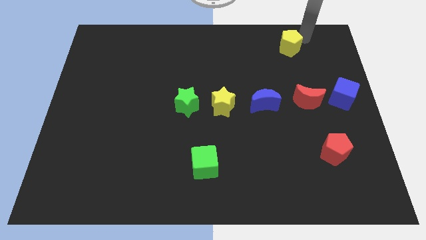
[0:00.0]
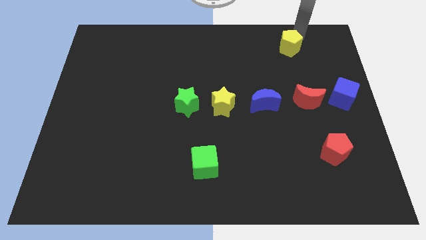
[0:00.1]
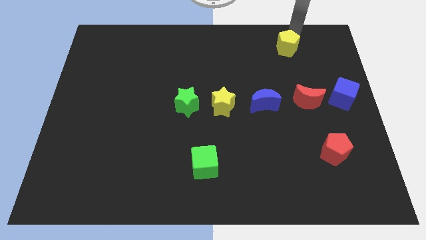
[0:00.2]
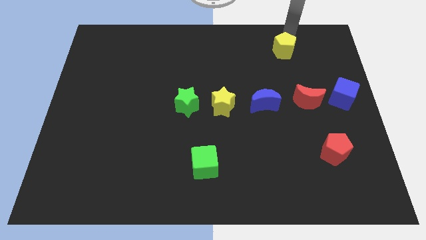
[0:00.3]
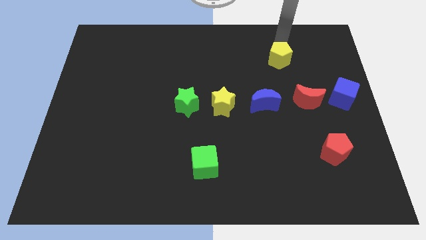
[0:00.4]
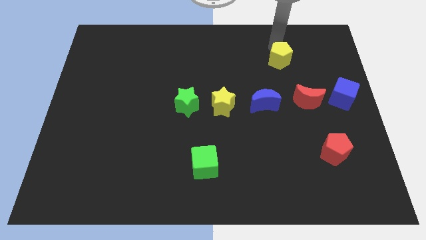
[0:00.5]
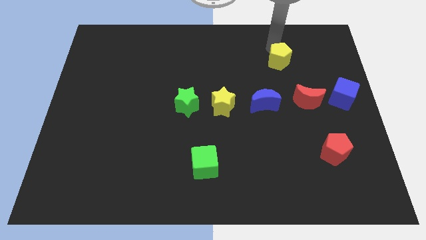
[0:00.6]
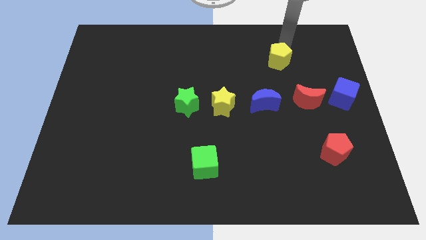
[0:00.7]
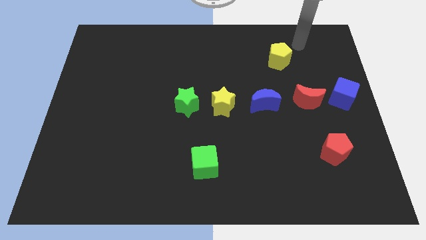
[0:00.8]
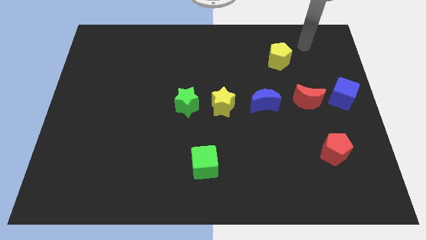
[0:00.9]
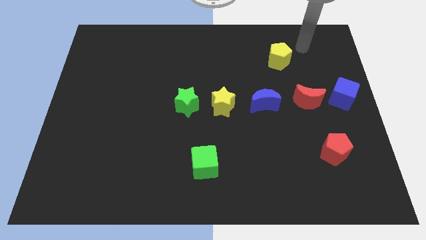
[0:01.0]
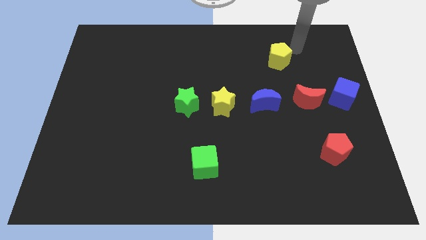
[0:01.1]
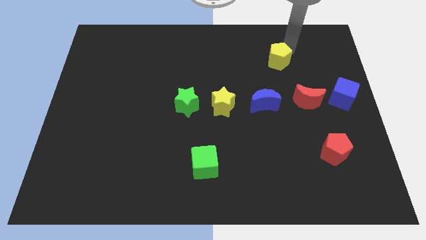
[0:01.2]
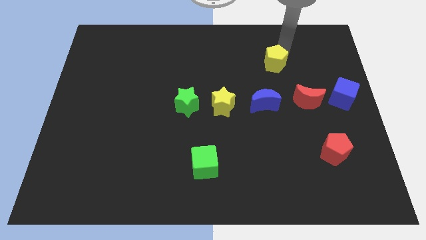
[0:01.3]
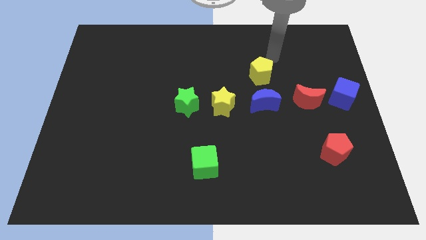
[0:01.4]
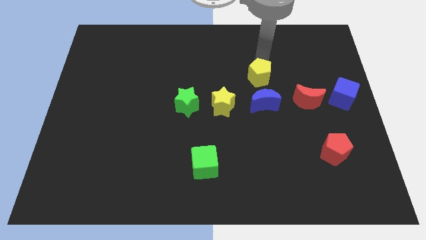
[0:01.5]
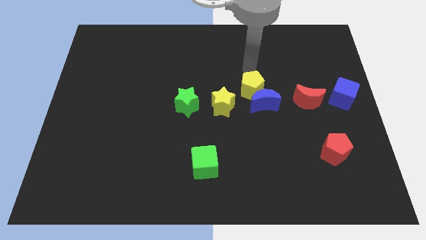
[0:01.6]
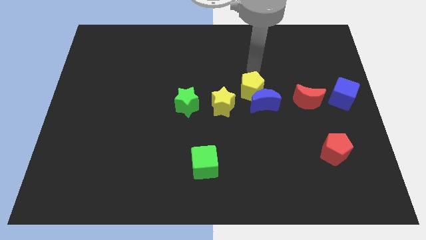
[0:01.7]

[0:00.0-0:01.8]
drag the yellow pentagon slightly downwards

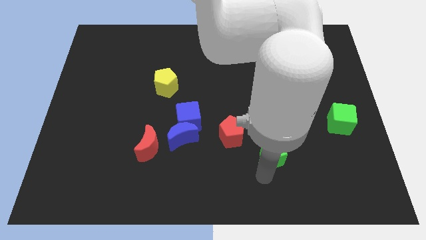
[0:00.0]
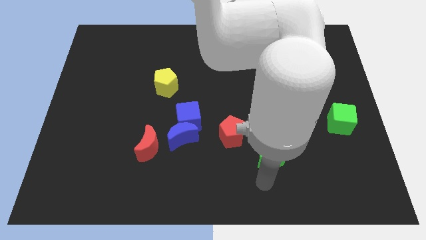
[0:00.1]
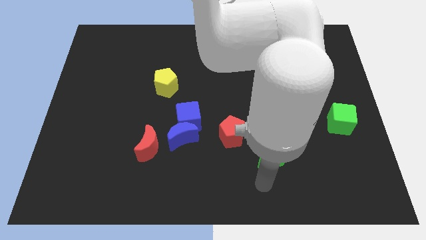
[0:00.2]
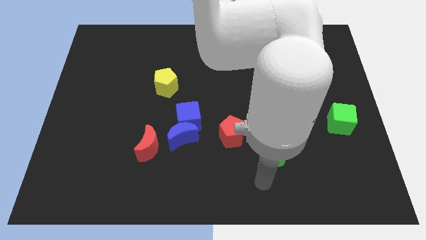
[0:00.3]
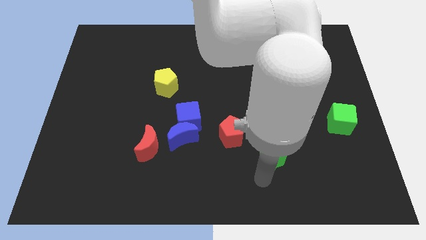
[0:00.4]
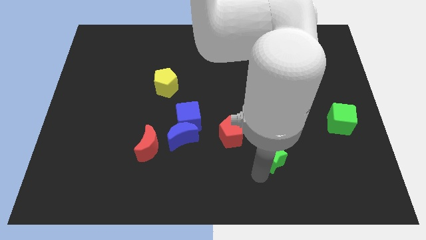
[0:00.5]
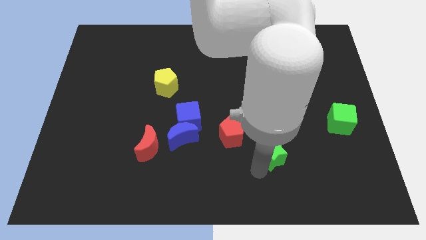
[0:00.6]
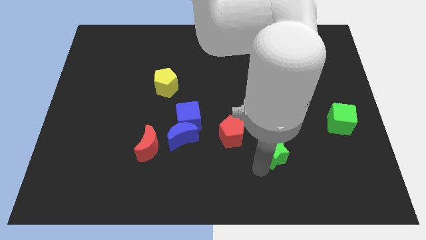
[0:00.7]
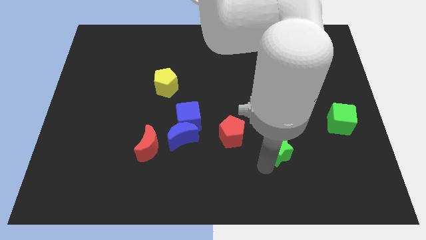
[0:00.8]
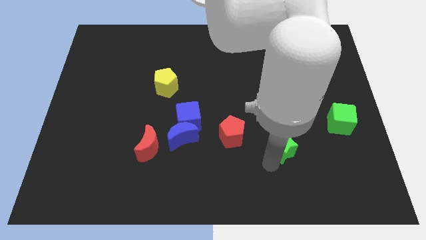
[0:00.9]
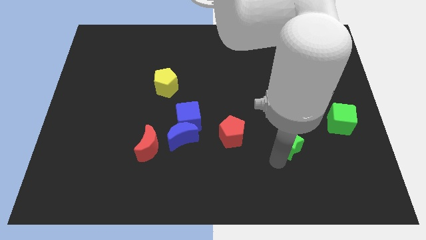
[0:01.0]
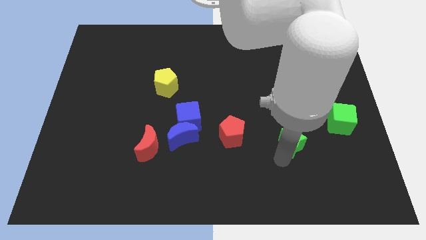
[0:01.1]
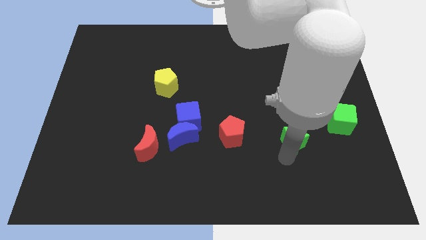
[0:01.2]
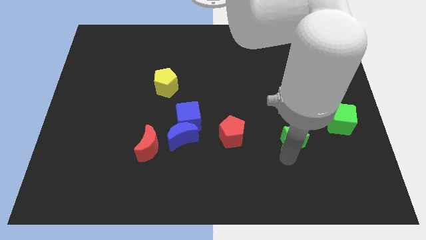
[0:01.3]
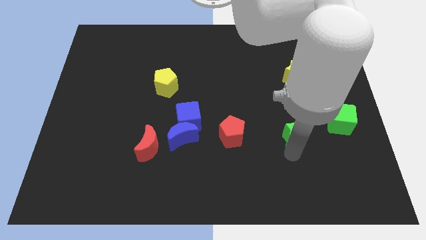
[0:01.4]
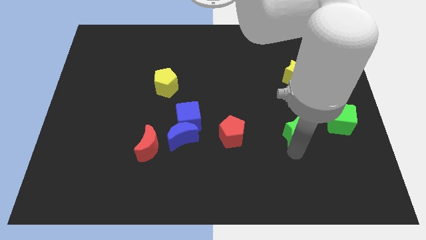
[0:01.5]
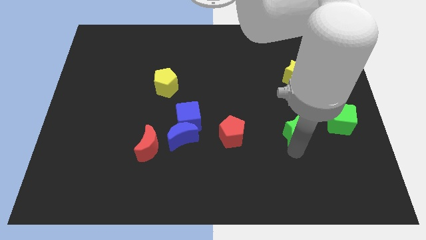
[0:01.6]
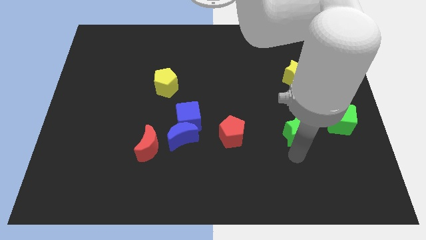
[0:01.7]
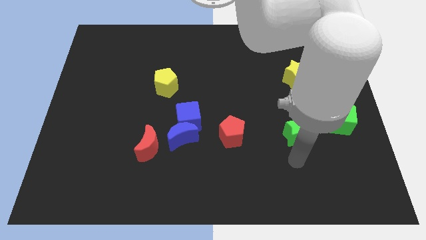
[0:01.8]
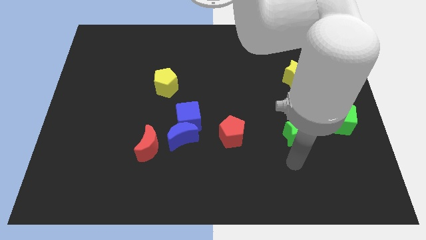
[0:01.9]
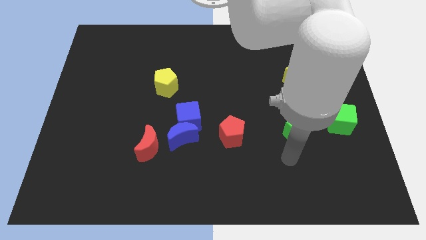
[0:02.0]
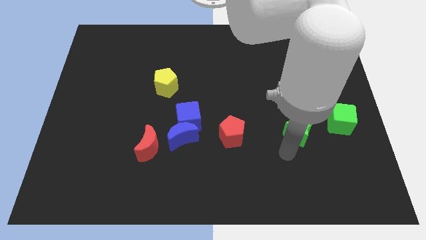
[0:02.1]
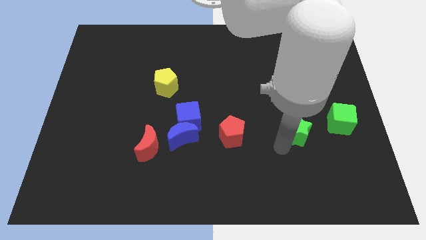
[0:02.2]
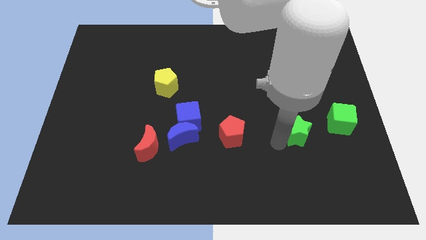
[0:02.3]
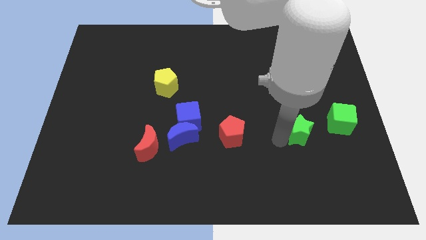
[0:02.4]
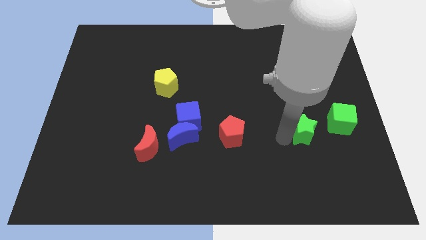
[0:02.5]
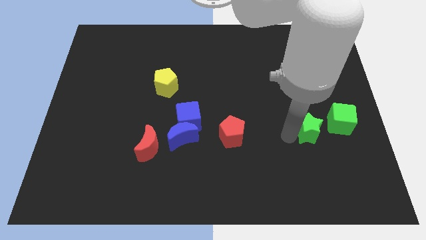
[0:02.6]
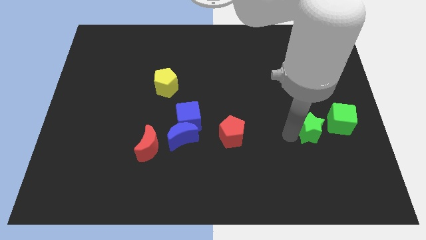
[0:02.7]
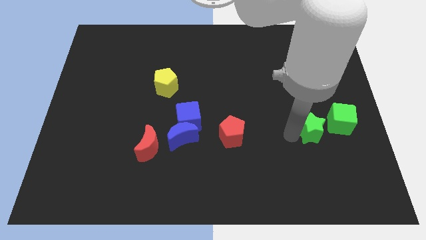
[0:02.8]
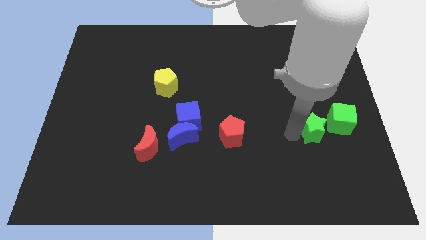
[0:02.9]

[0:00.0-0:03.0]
push the green star to the left of the green cube

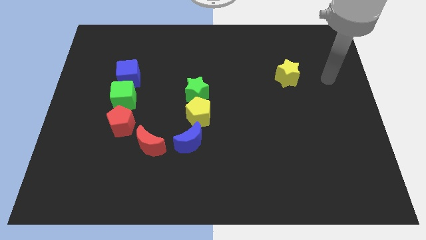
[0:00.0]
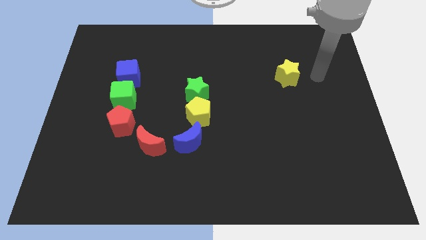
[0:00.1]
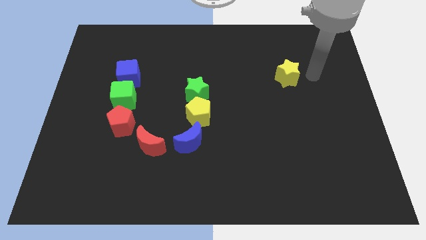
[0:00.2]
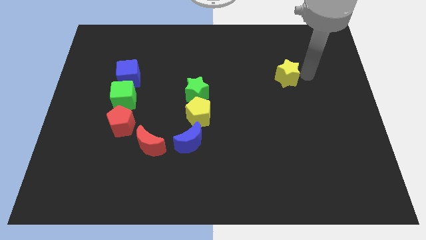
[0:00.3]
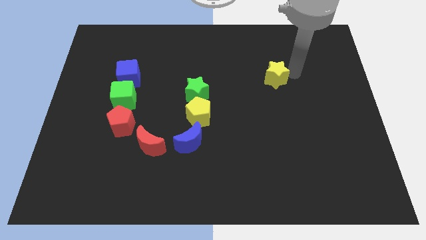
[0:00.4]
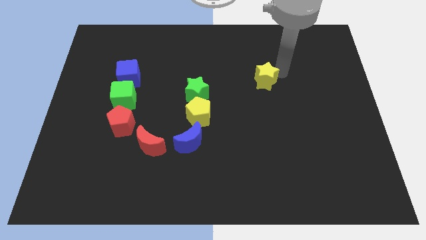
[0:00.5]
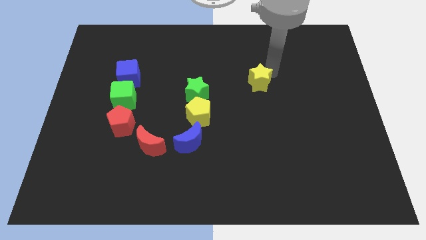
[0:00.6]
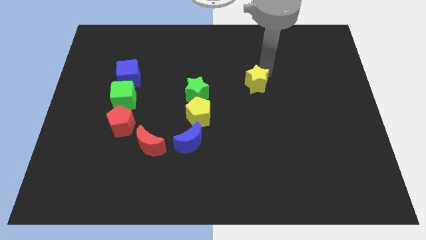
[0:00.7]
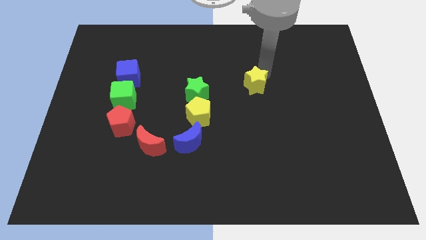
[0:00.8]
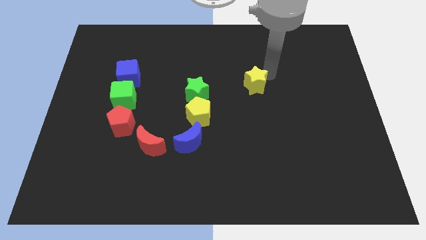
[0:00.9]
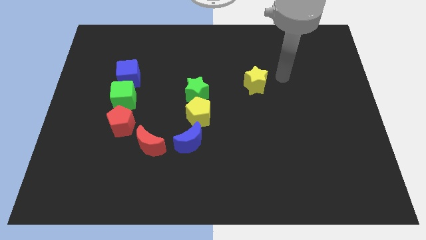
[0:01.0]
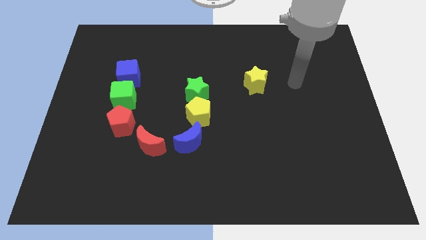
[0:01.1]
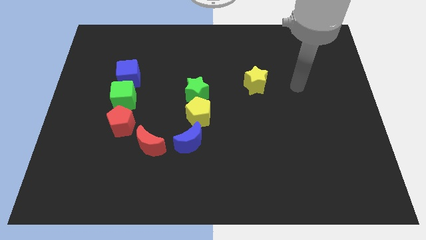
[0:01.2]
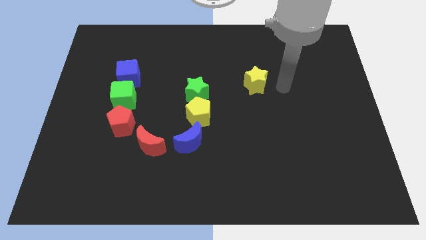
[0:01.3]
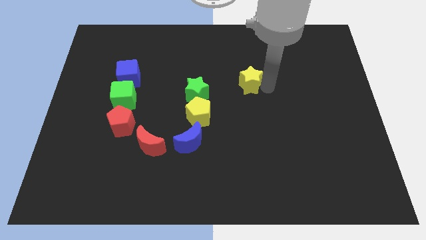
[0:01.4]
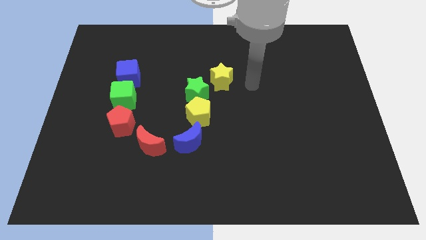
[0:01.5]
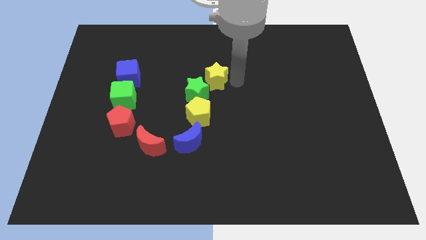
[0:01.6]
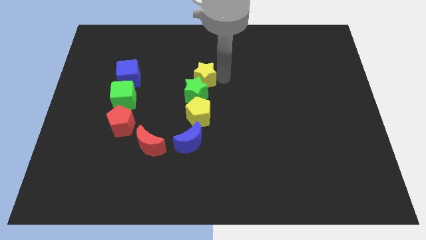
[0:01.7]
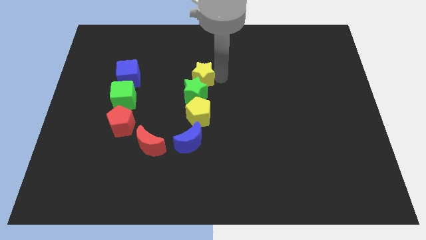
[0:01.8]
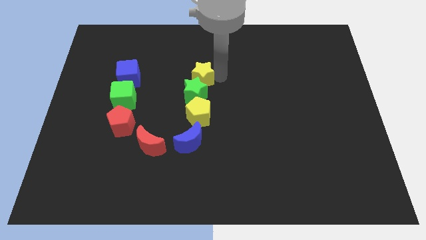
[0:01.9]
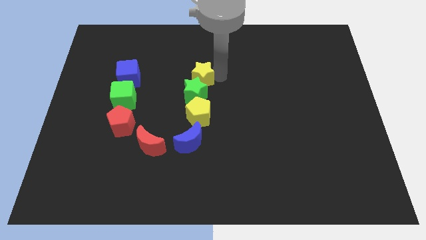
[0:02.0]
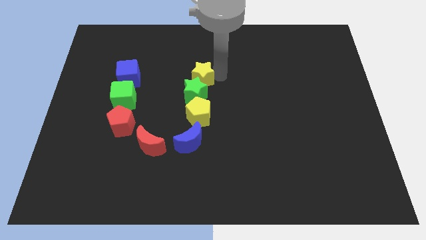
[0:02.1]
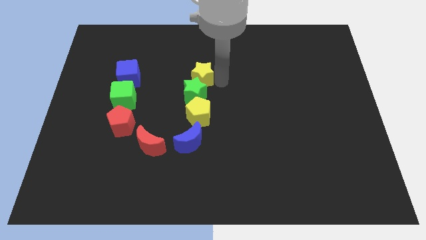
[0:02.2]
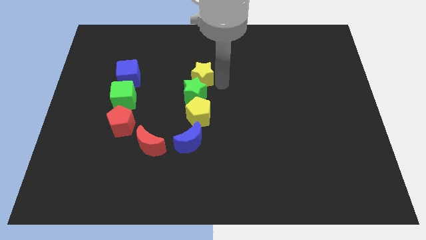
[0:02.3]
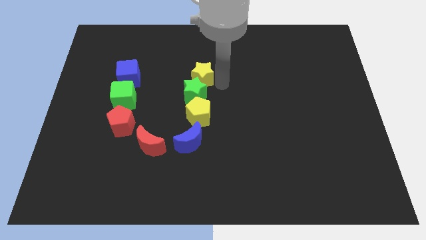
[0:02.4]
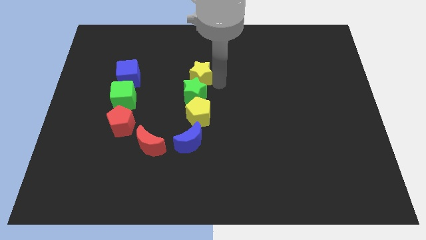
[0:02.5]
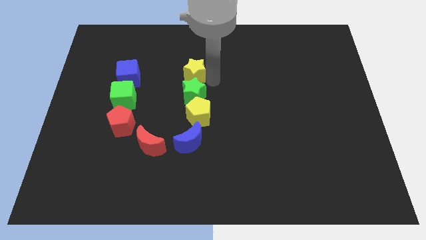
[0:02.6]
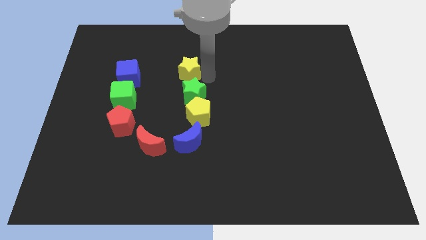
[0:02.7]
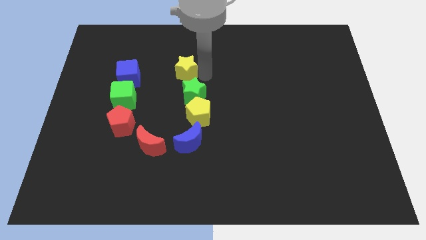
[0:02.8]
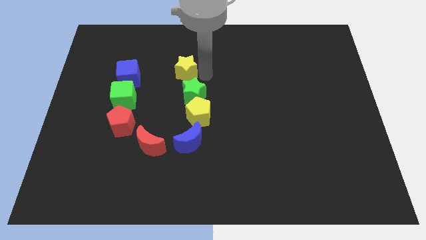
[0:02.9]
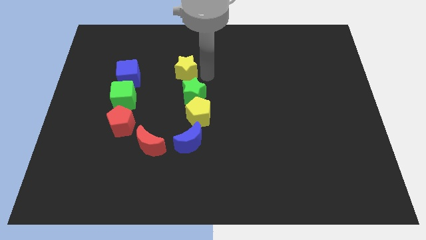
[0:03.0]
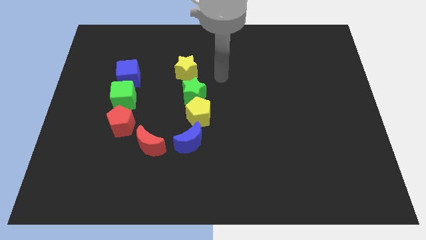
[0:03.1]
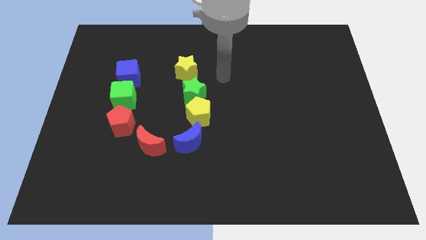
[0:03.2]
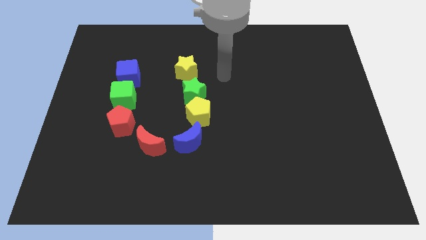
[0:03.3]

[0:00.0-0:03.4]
push the yellow star above the green star

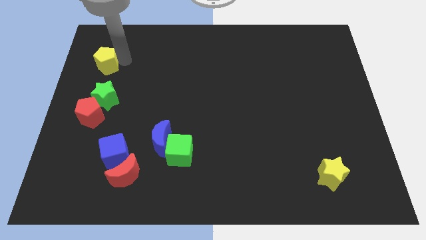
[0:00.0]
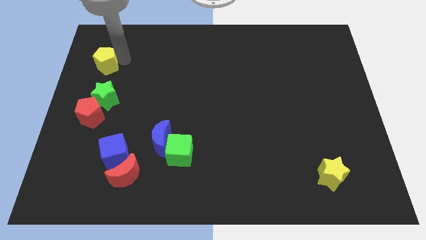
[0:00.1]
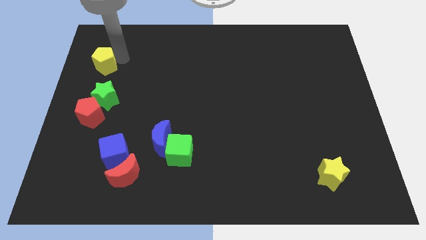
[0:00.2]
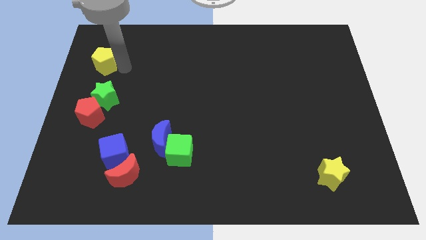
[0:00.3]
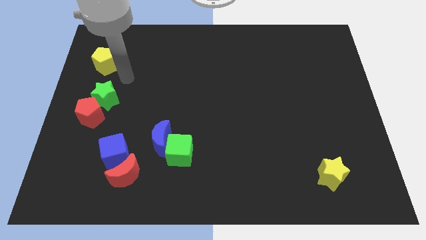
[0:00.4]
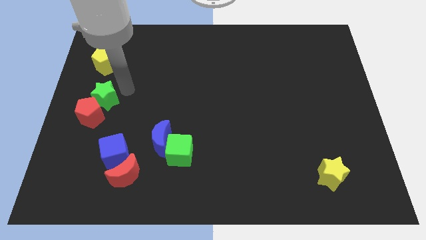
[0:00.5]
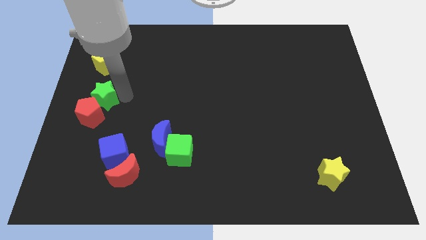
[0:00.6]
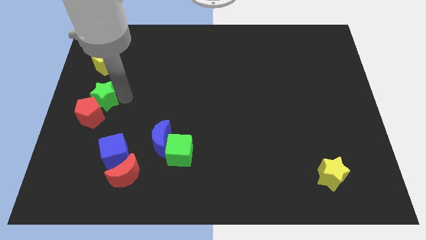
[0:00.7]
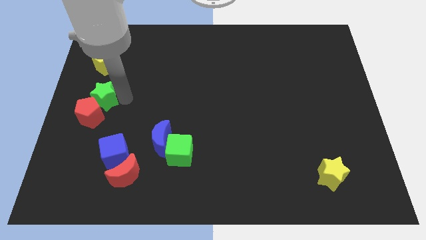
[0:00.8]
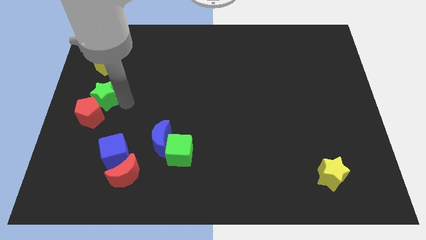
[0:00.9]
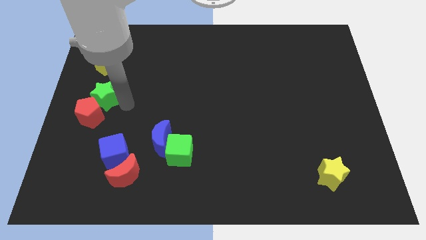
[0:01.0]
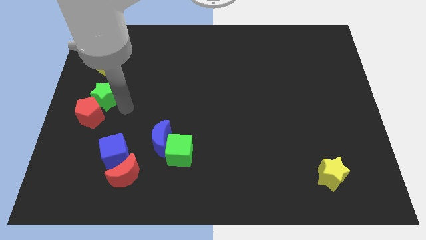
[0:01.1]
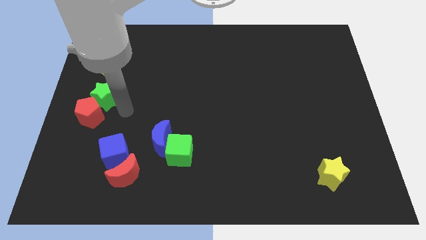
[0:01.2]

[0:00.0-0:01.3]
move the green star slightly to the left
